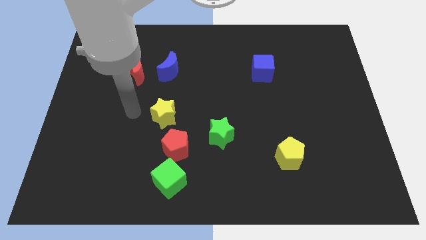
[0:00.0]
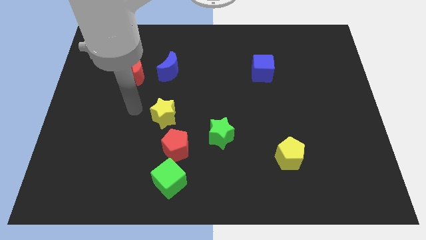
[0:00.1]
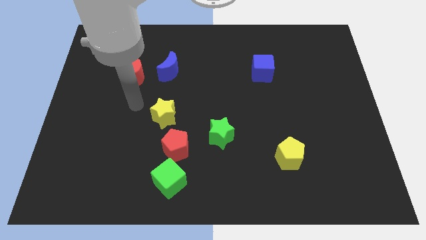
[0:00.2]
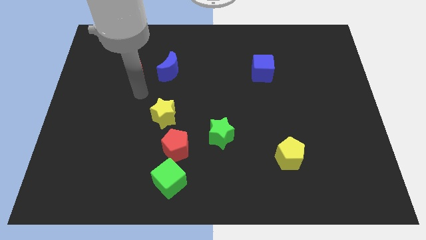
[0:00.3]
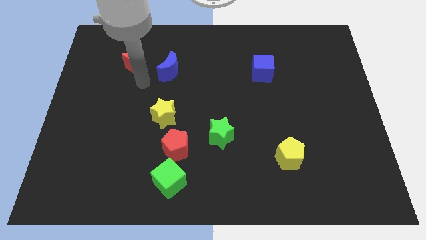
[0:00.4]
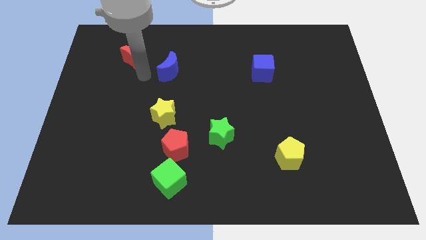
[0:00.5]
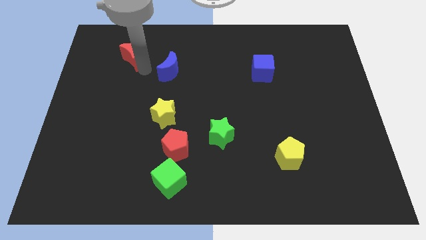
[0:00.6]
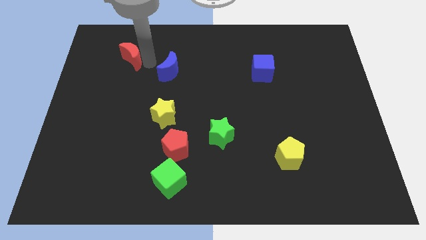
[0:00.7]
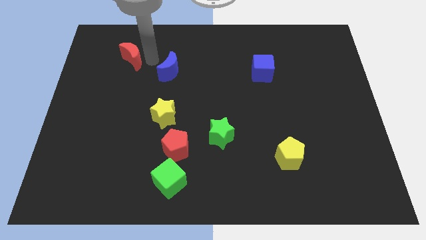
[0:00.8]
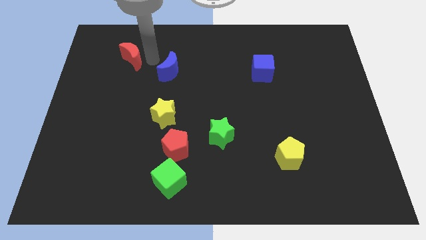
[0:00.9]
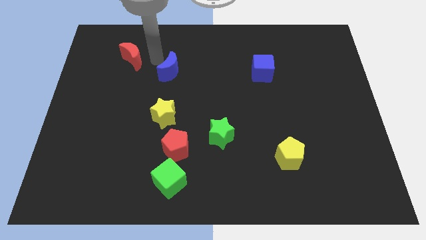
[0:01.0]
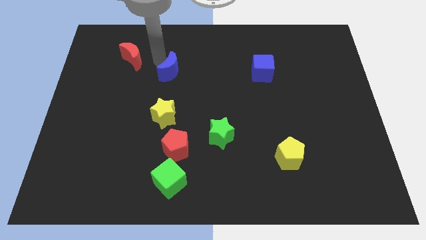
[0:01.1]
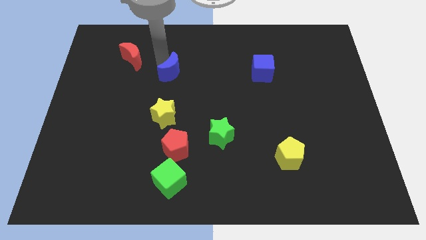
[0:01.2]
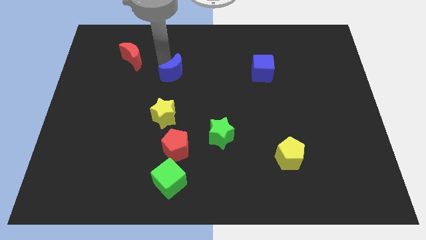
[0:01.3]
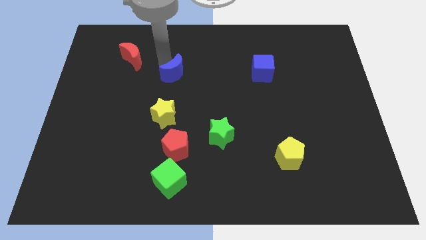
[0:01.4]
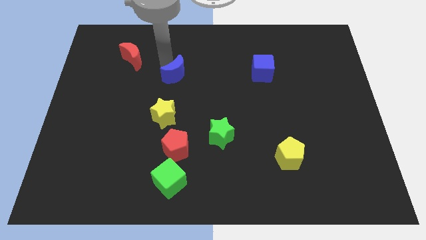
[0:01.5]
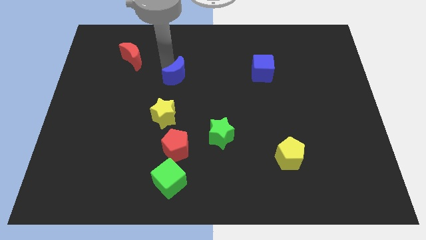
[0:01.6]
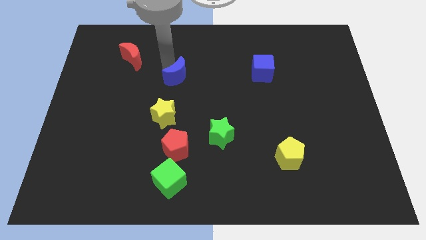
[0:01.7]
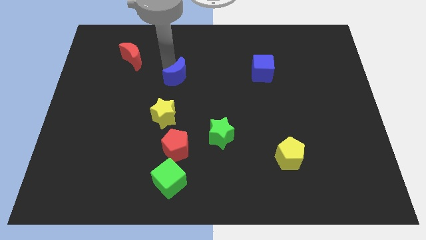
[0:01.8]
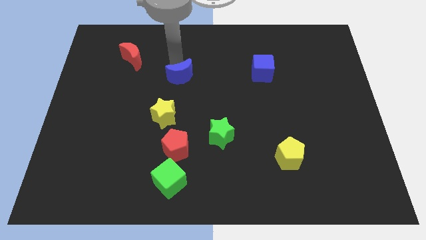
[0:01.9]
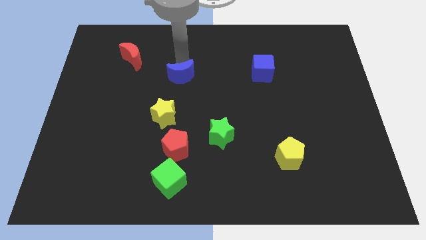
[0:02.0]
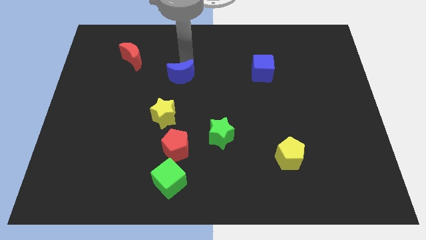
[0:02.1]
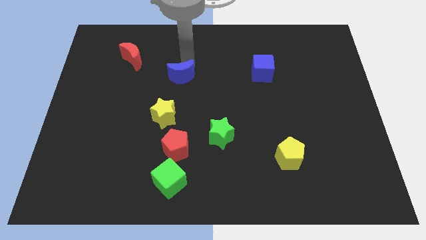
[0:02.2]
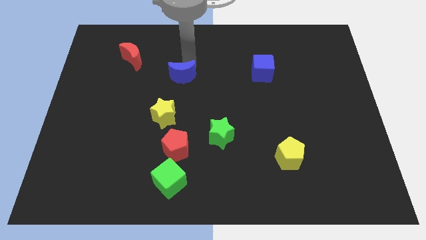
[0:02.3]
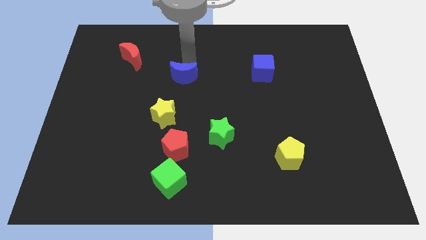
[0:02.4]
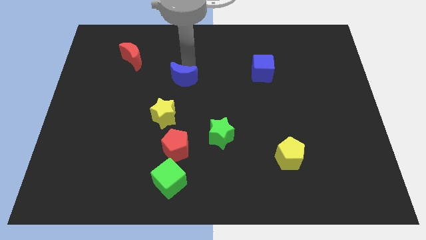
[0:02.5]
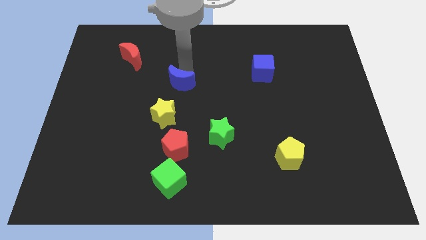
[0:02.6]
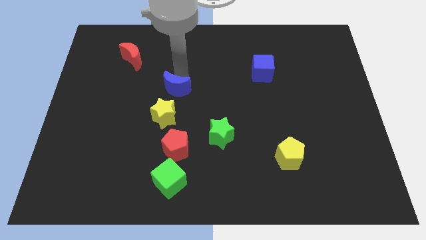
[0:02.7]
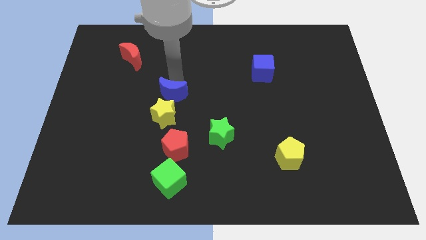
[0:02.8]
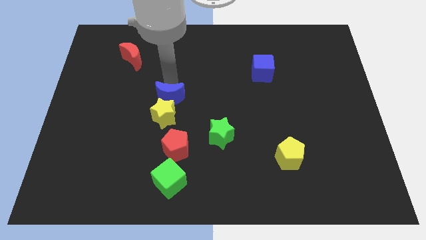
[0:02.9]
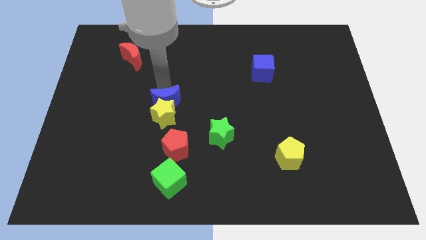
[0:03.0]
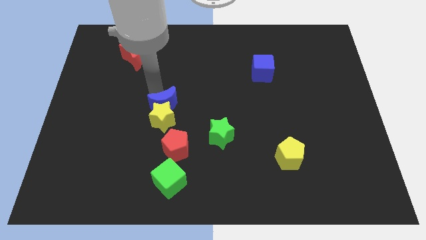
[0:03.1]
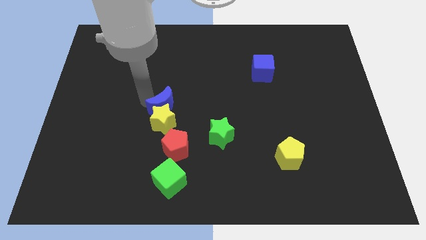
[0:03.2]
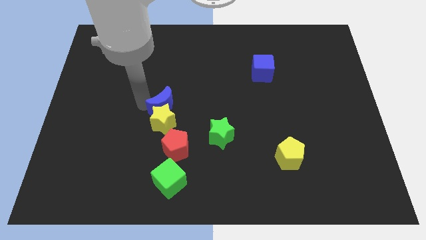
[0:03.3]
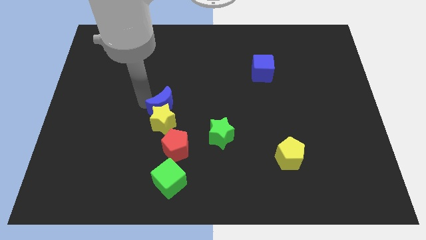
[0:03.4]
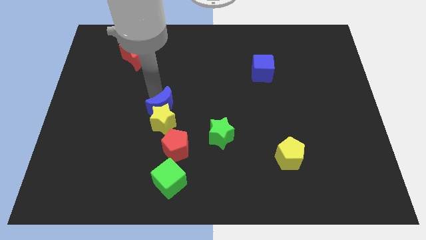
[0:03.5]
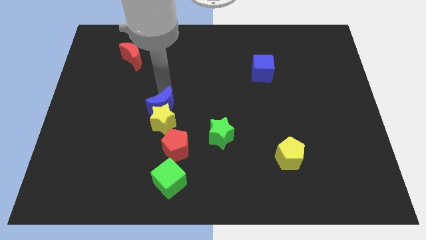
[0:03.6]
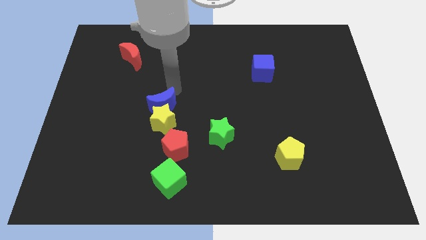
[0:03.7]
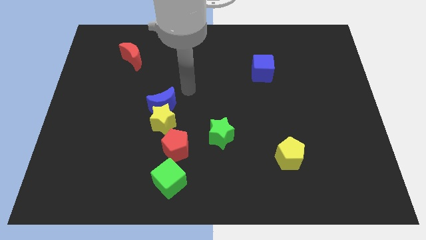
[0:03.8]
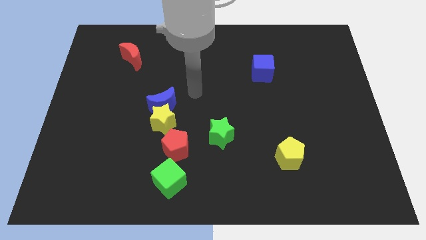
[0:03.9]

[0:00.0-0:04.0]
push blue moon in to yellow star

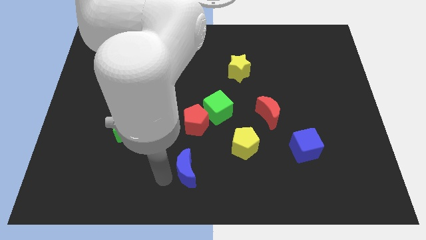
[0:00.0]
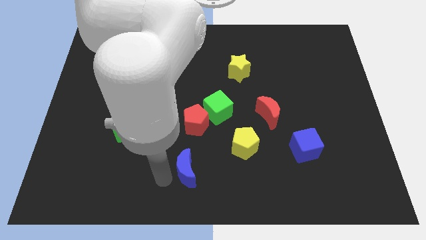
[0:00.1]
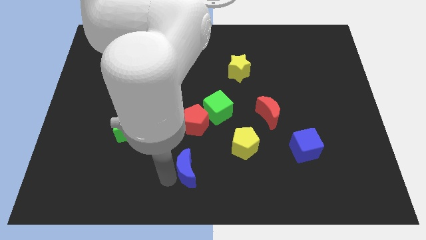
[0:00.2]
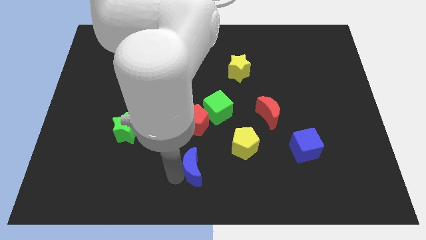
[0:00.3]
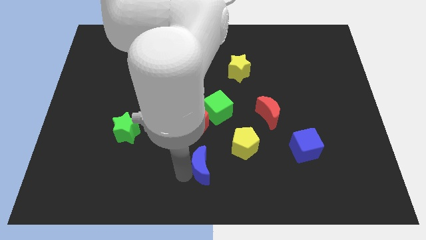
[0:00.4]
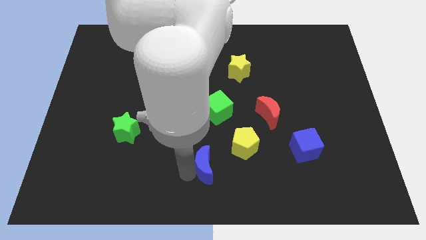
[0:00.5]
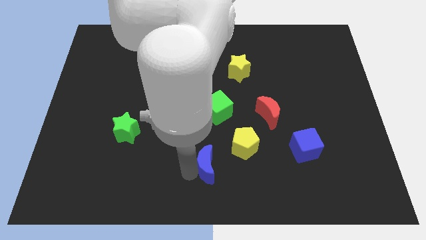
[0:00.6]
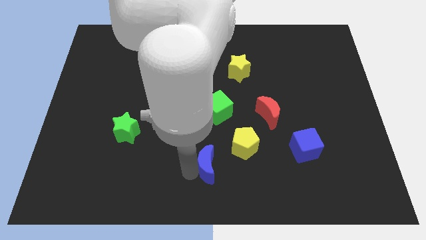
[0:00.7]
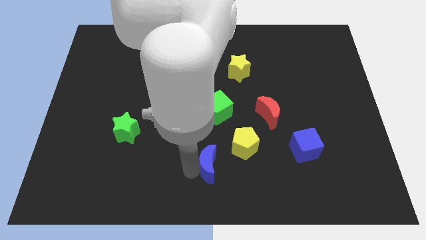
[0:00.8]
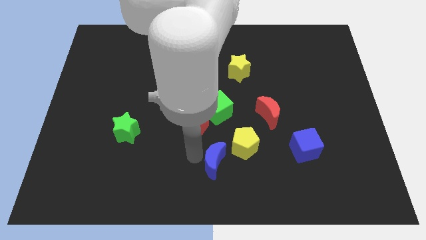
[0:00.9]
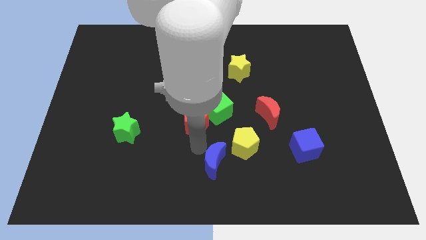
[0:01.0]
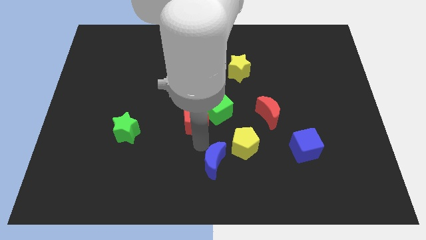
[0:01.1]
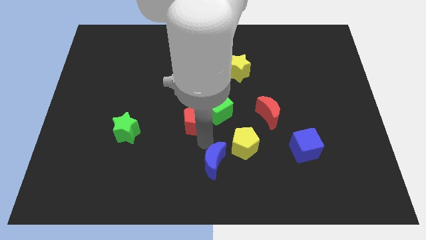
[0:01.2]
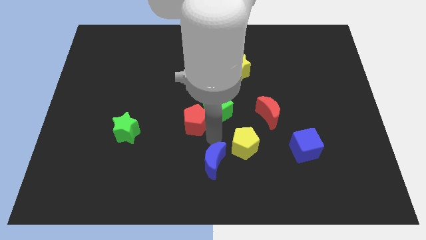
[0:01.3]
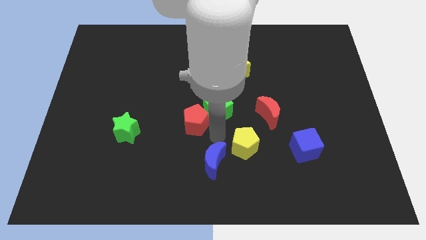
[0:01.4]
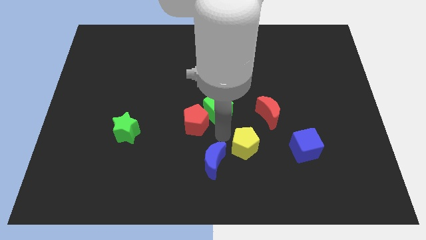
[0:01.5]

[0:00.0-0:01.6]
place the blue moon near the yellow pentagon

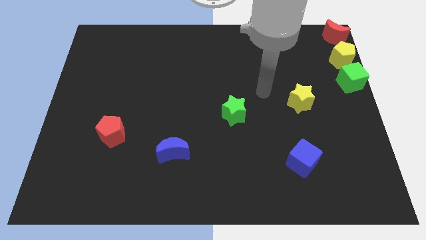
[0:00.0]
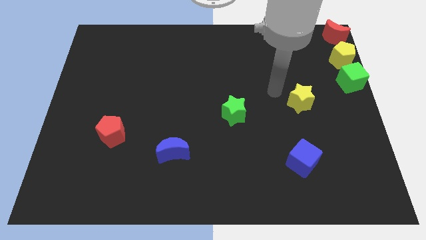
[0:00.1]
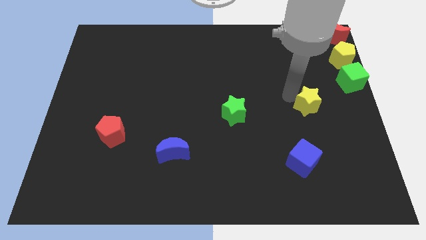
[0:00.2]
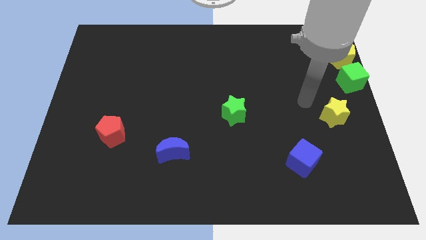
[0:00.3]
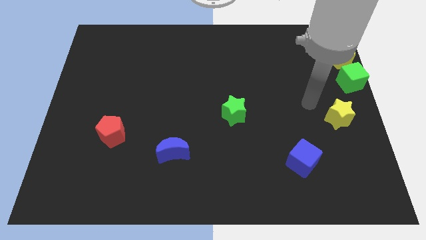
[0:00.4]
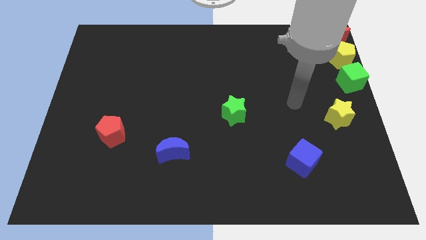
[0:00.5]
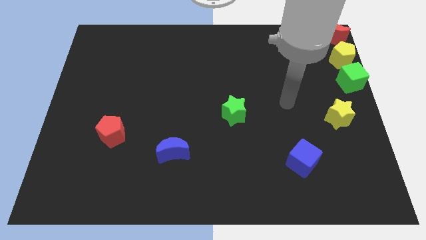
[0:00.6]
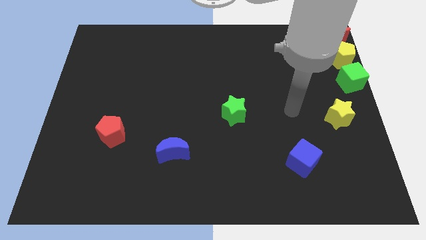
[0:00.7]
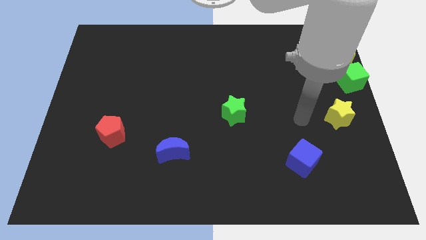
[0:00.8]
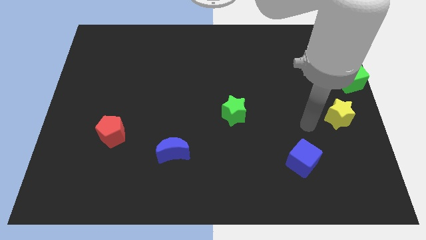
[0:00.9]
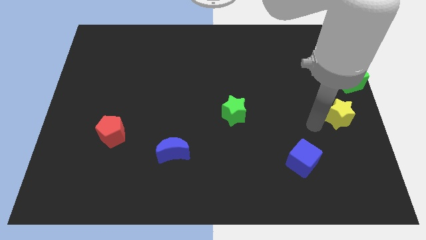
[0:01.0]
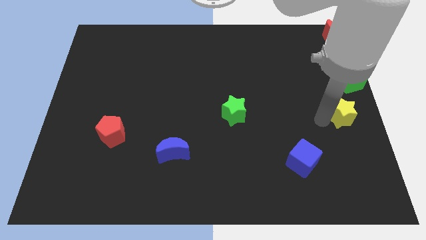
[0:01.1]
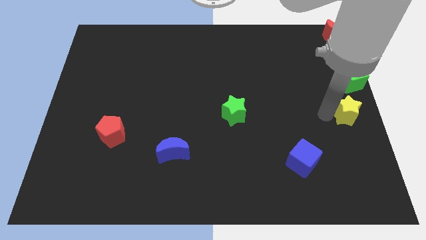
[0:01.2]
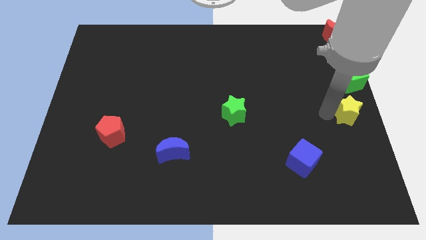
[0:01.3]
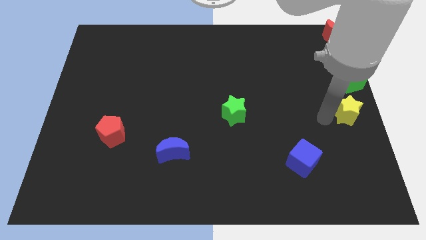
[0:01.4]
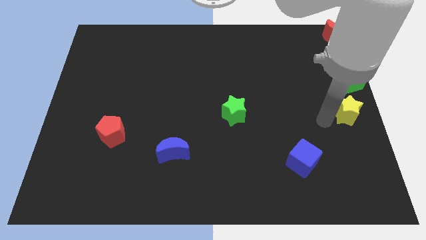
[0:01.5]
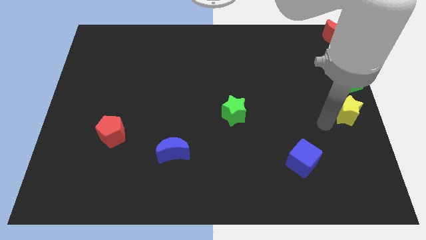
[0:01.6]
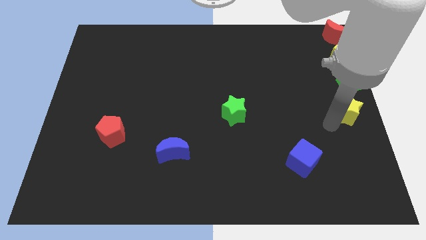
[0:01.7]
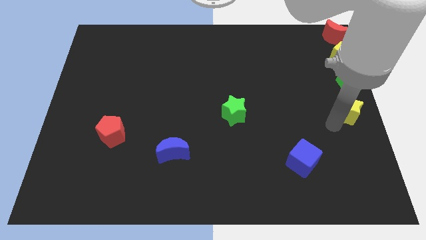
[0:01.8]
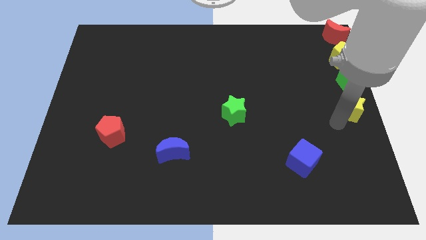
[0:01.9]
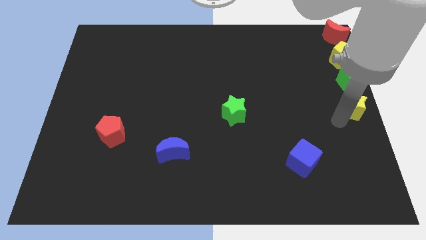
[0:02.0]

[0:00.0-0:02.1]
move yellow star to the center right

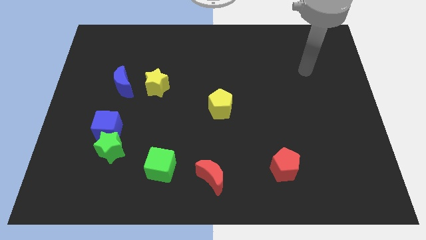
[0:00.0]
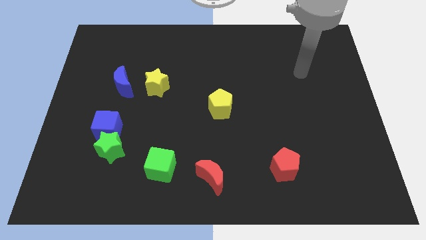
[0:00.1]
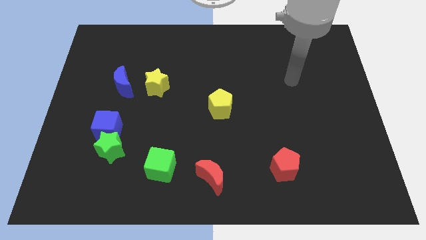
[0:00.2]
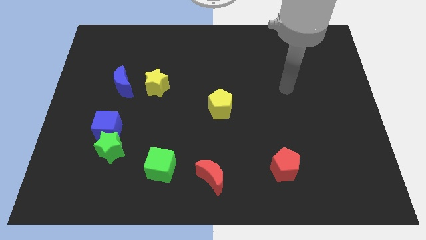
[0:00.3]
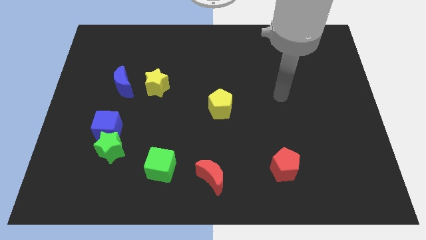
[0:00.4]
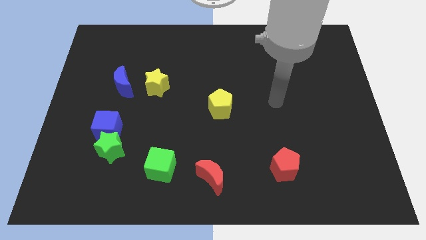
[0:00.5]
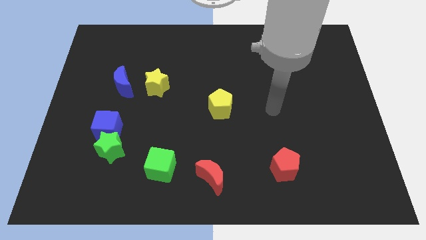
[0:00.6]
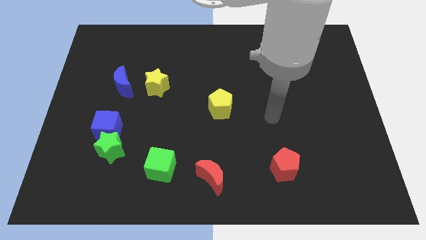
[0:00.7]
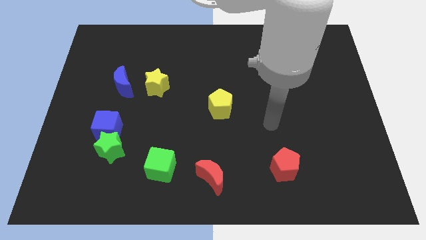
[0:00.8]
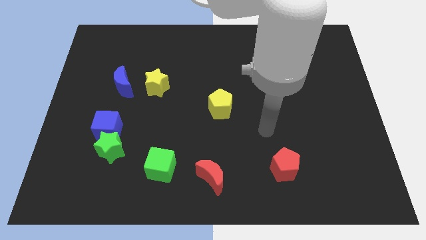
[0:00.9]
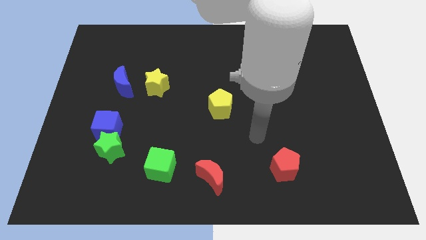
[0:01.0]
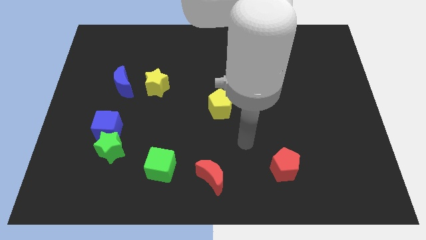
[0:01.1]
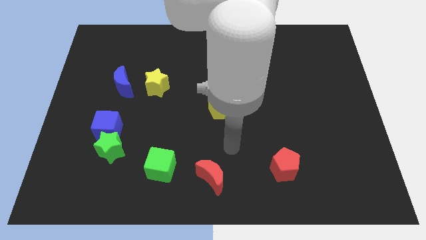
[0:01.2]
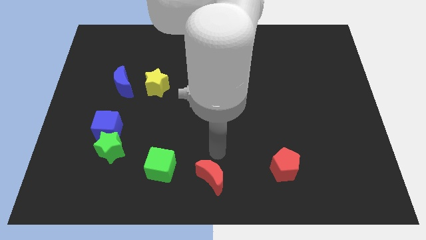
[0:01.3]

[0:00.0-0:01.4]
point your arm above the red moon
